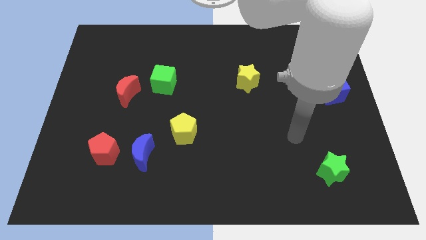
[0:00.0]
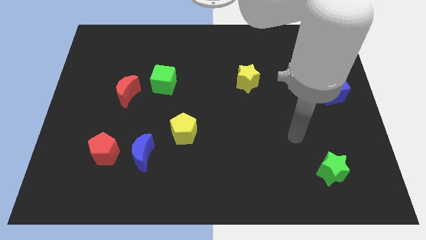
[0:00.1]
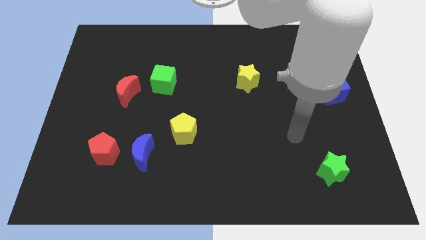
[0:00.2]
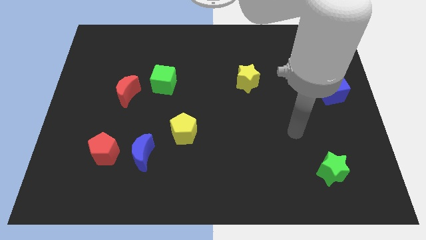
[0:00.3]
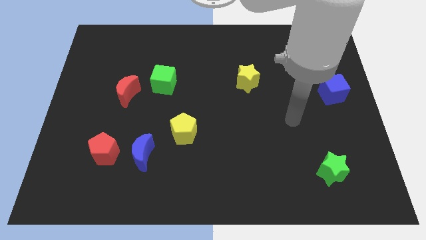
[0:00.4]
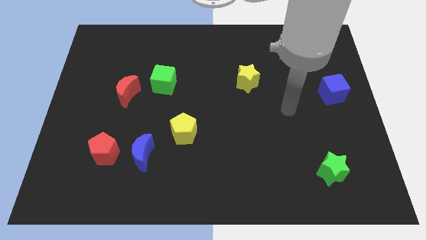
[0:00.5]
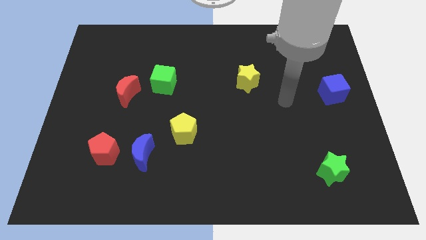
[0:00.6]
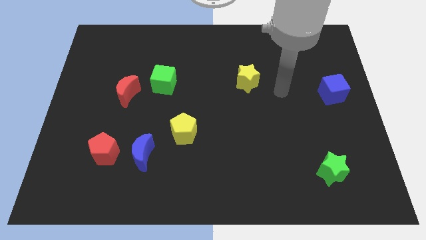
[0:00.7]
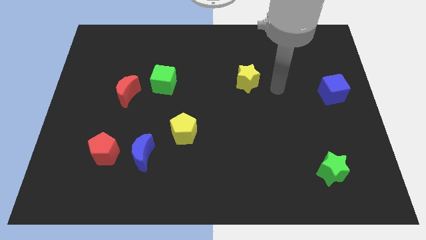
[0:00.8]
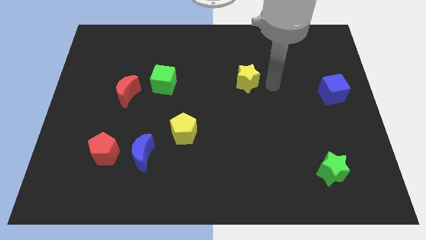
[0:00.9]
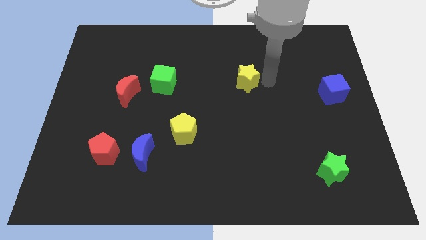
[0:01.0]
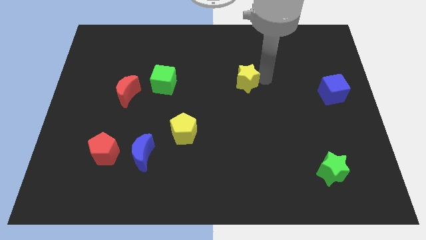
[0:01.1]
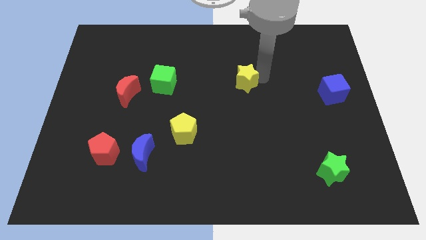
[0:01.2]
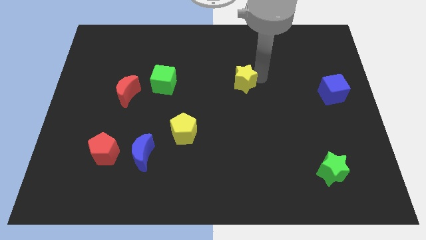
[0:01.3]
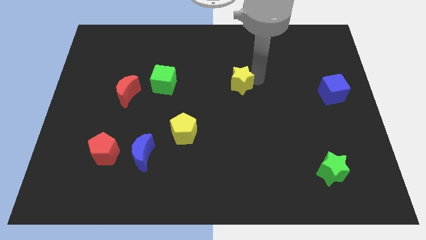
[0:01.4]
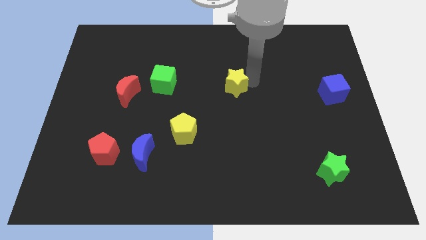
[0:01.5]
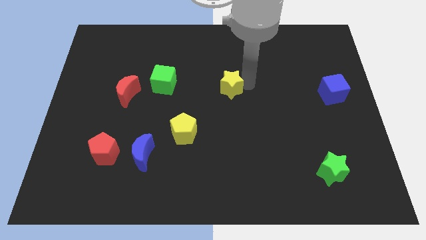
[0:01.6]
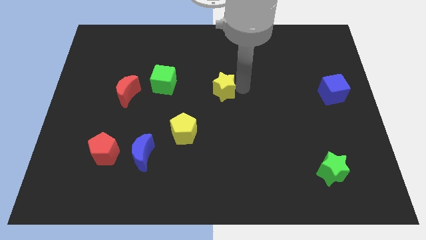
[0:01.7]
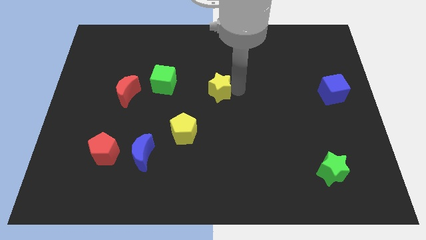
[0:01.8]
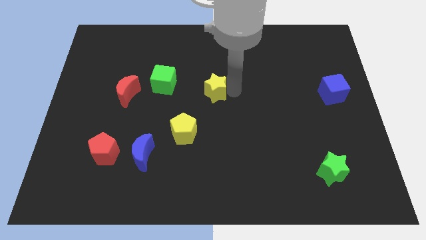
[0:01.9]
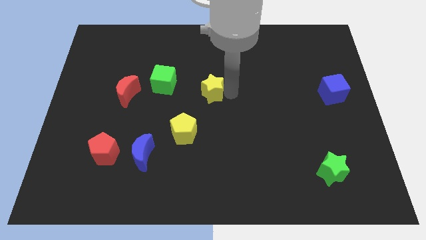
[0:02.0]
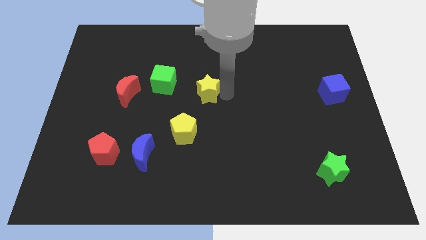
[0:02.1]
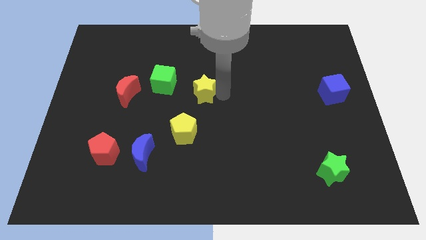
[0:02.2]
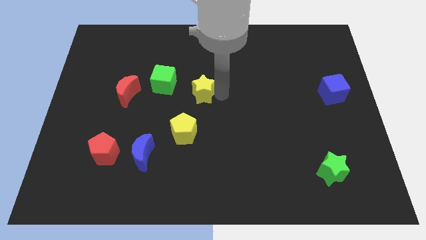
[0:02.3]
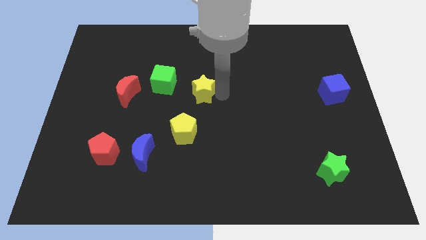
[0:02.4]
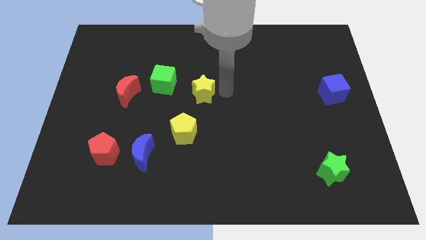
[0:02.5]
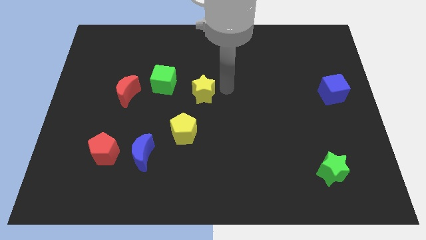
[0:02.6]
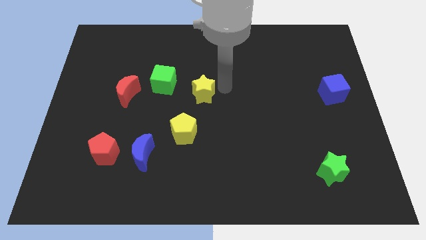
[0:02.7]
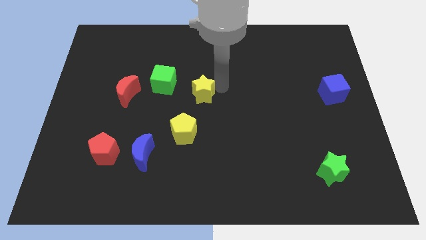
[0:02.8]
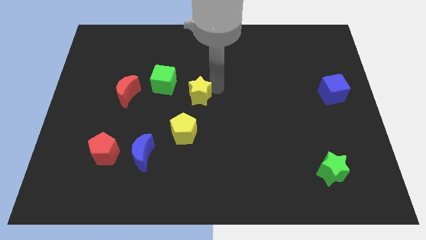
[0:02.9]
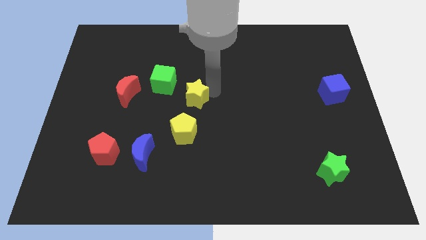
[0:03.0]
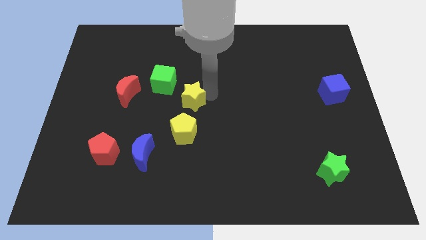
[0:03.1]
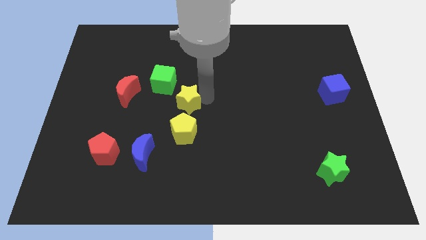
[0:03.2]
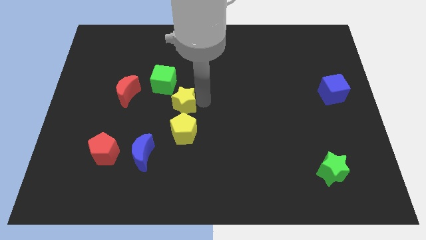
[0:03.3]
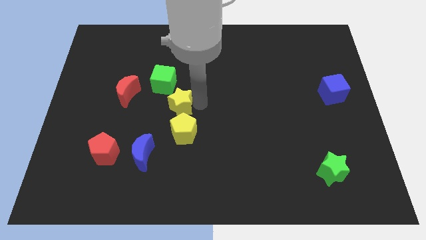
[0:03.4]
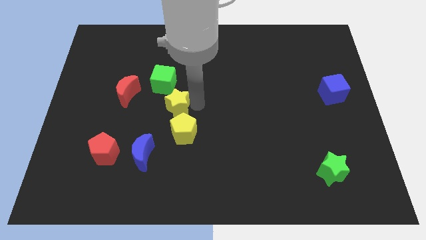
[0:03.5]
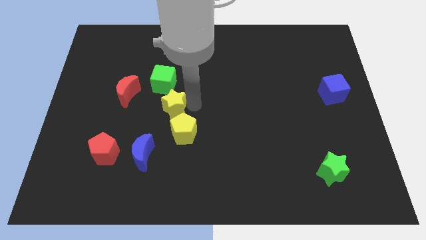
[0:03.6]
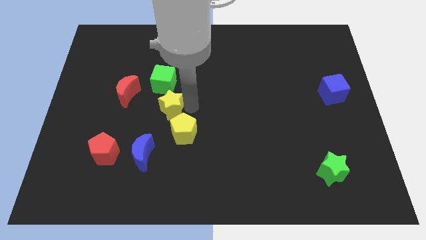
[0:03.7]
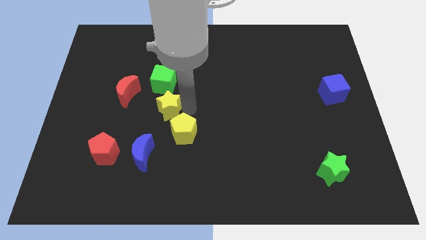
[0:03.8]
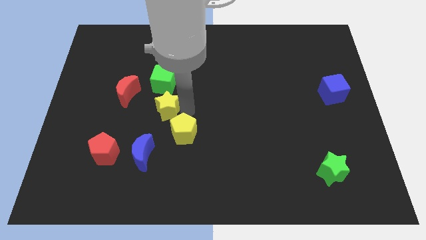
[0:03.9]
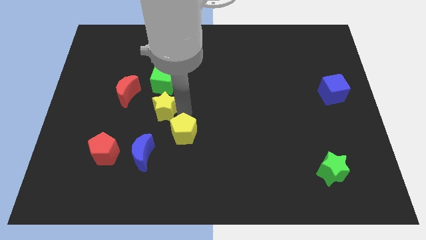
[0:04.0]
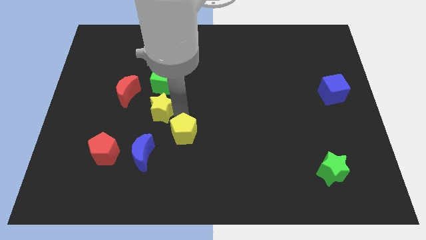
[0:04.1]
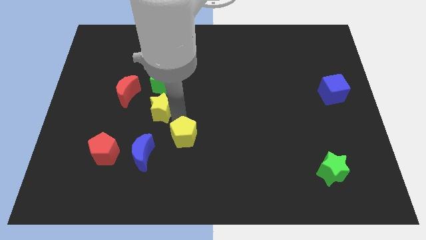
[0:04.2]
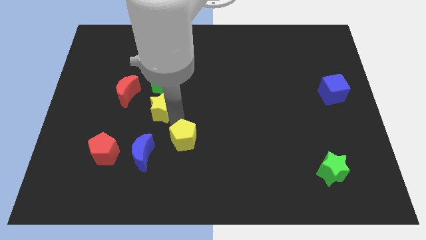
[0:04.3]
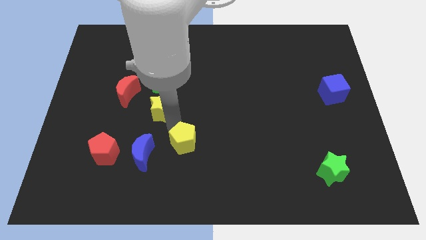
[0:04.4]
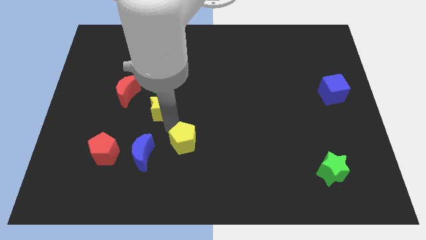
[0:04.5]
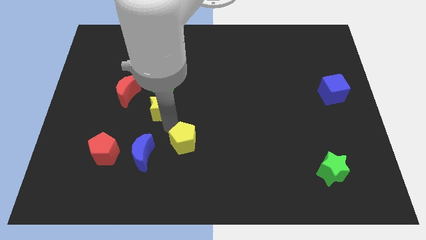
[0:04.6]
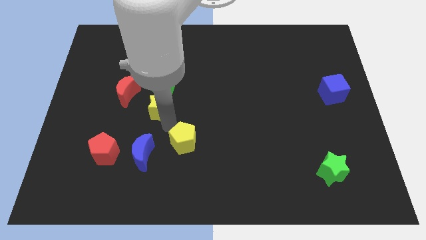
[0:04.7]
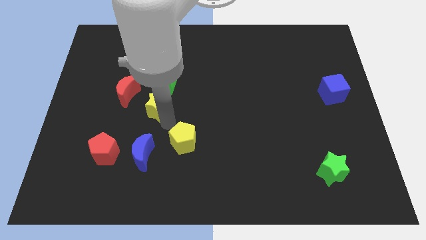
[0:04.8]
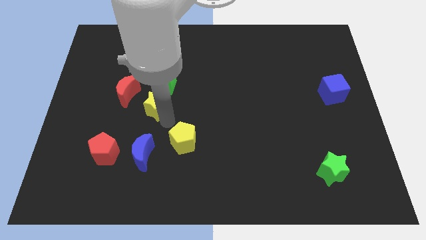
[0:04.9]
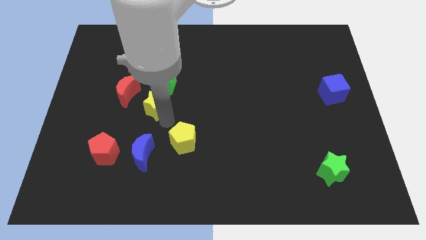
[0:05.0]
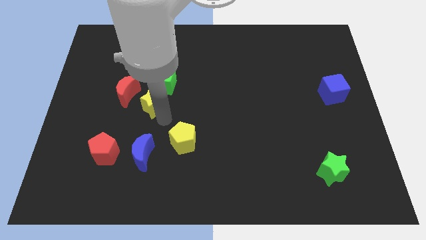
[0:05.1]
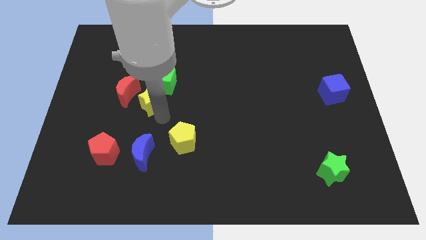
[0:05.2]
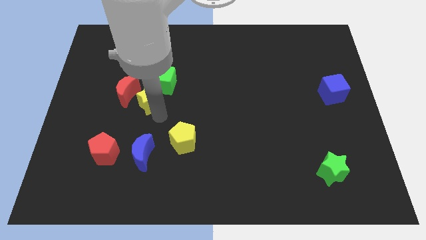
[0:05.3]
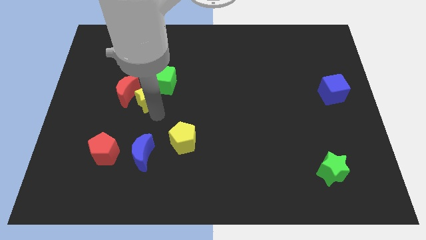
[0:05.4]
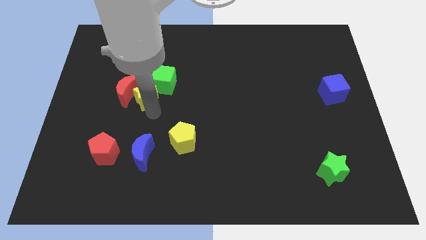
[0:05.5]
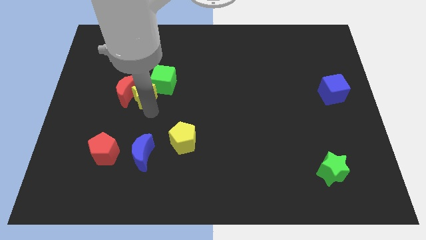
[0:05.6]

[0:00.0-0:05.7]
slide the yellow star towards the red moon

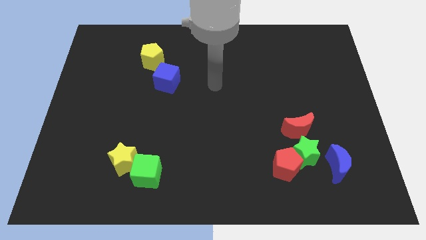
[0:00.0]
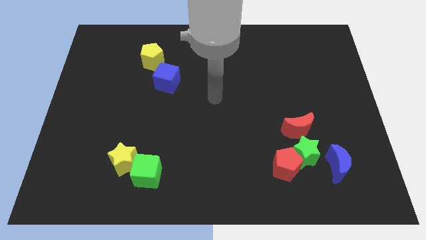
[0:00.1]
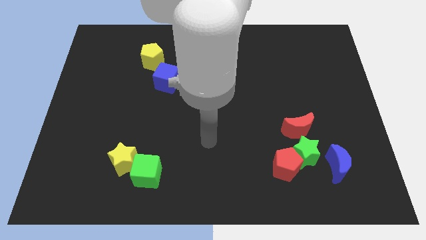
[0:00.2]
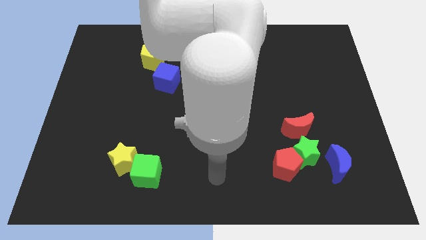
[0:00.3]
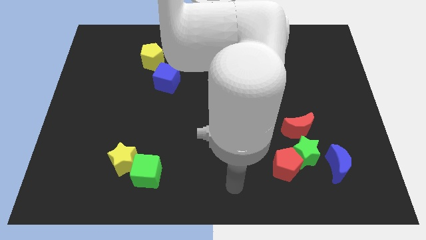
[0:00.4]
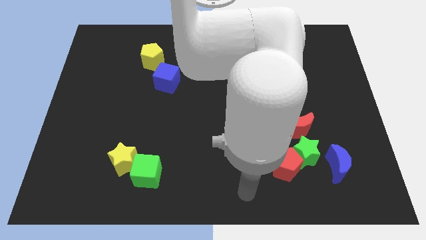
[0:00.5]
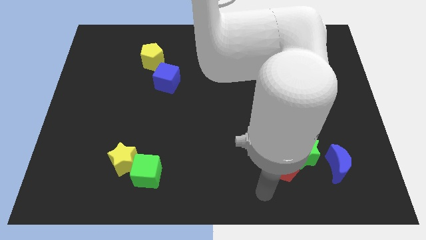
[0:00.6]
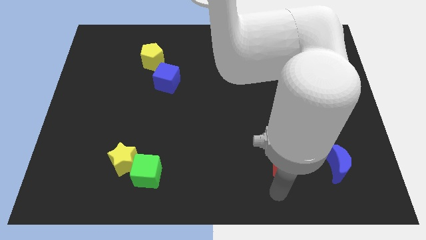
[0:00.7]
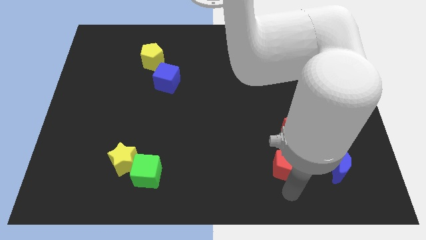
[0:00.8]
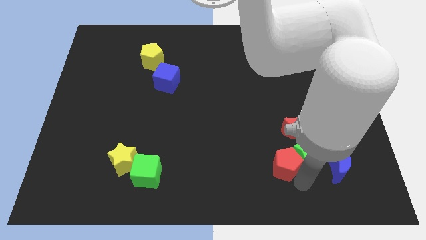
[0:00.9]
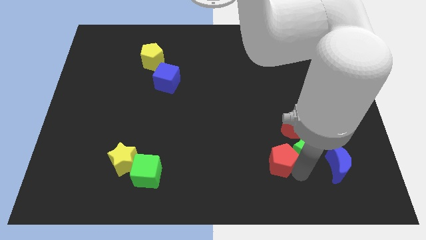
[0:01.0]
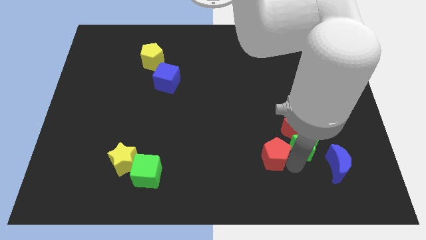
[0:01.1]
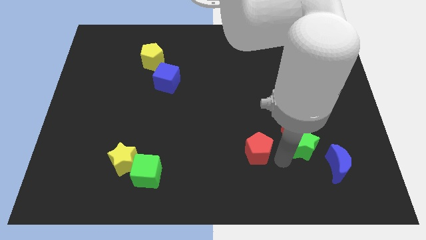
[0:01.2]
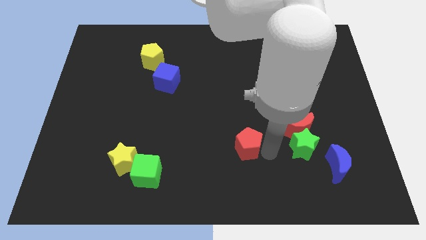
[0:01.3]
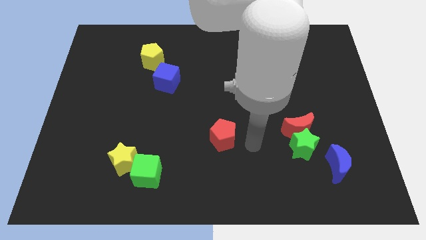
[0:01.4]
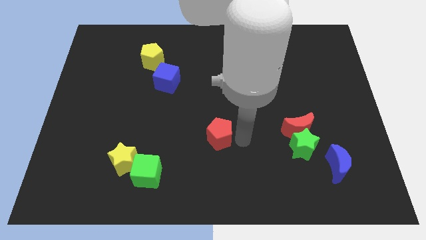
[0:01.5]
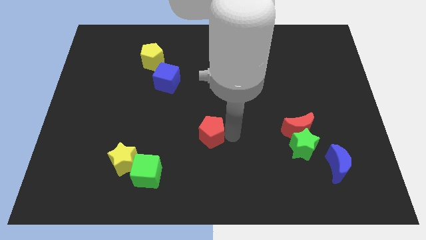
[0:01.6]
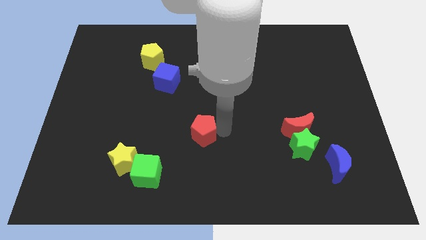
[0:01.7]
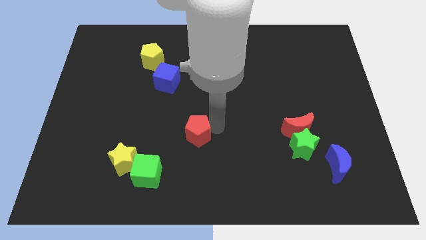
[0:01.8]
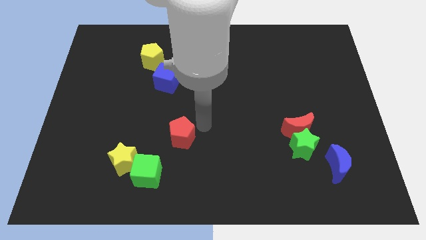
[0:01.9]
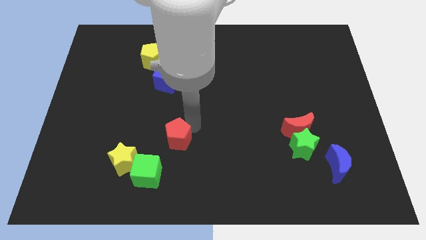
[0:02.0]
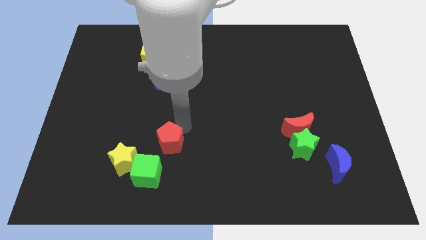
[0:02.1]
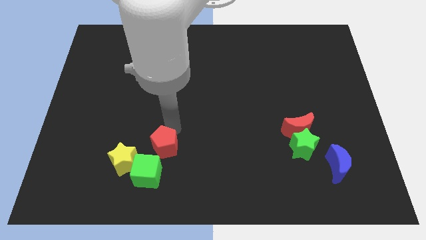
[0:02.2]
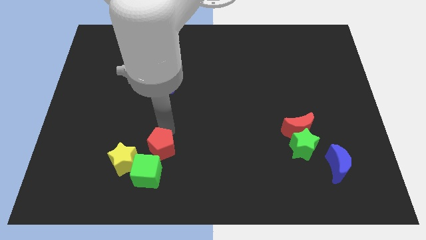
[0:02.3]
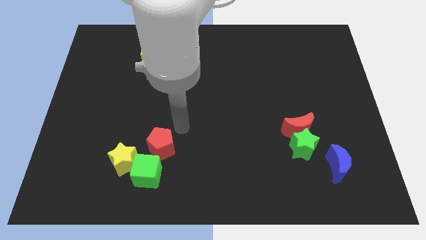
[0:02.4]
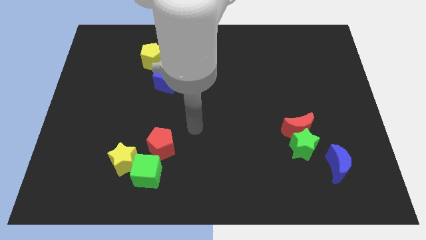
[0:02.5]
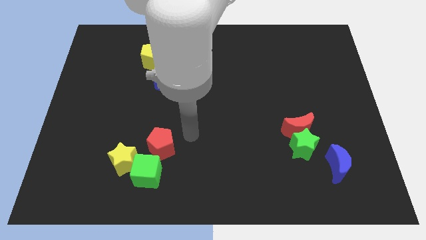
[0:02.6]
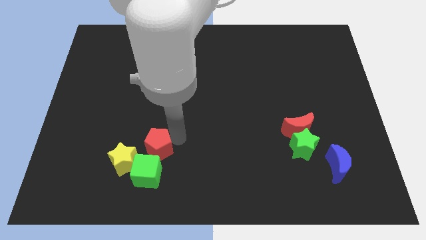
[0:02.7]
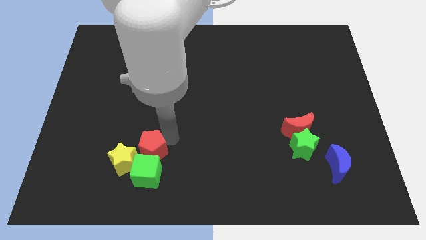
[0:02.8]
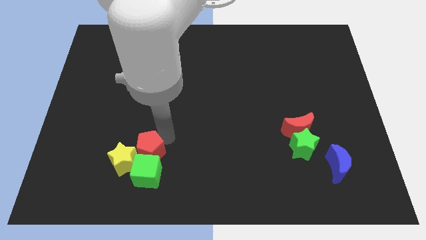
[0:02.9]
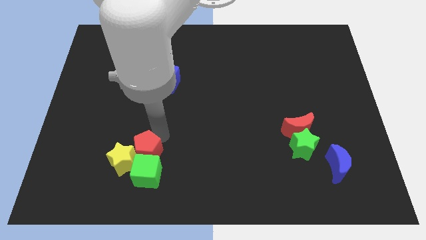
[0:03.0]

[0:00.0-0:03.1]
move the red pentagon towards the yellow star
